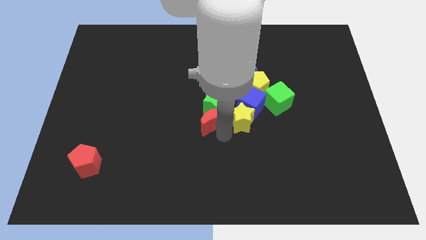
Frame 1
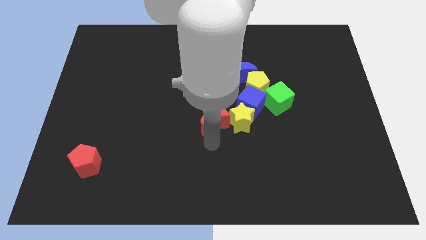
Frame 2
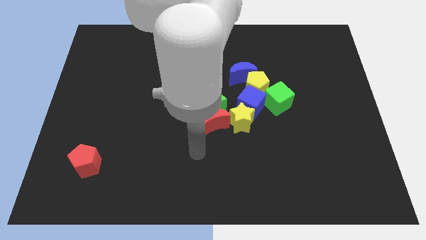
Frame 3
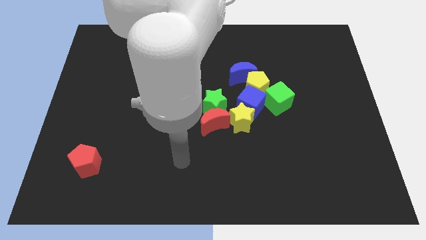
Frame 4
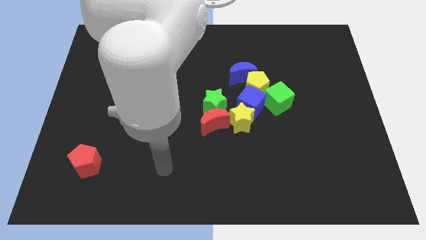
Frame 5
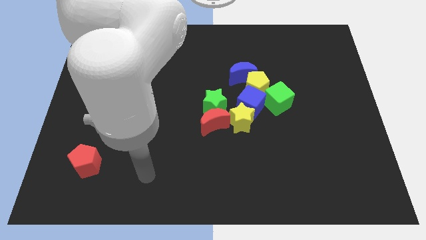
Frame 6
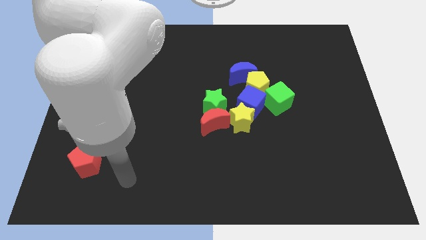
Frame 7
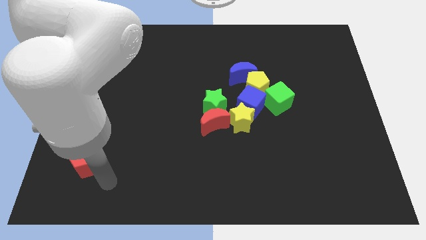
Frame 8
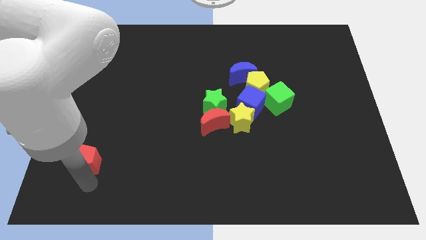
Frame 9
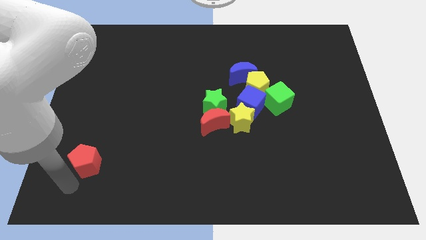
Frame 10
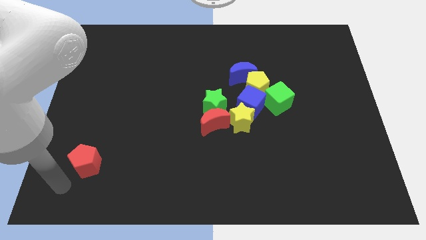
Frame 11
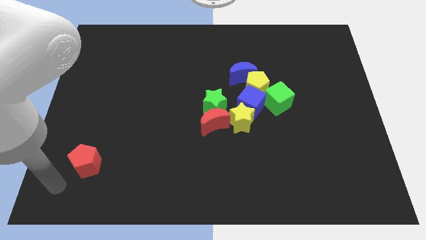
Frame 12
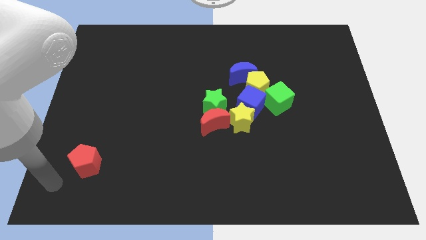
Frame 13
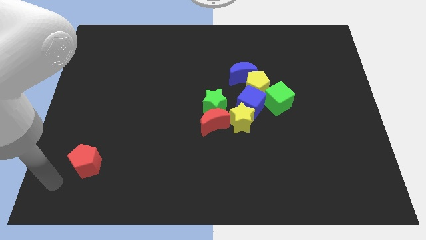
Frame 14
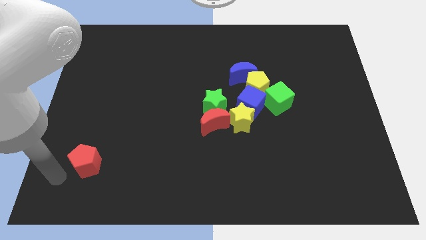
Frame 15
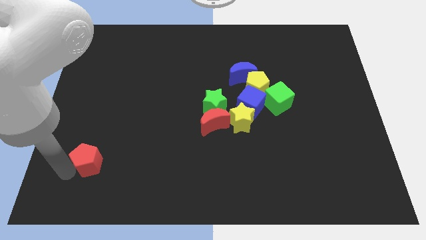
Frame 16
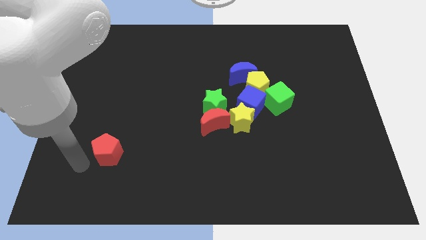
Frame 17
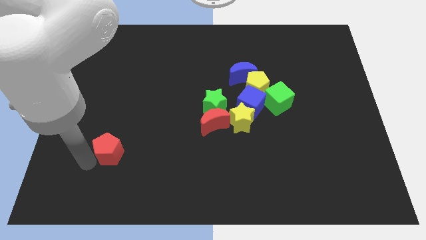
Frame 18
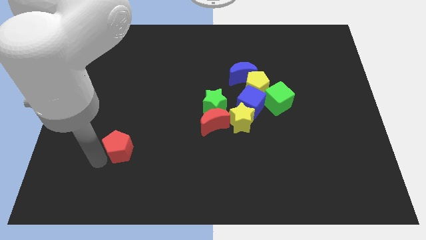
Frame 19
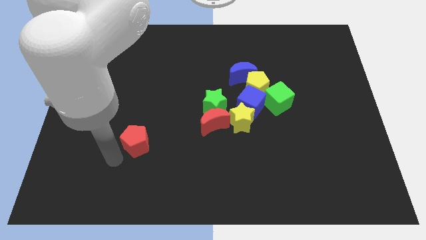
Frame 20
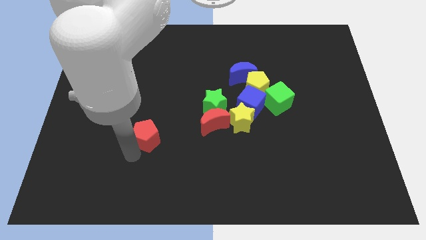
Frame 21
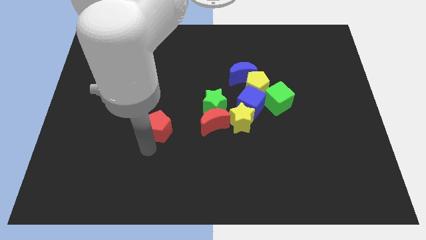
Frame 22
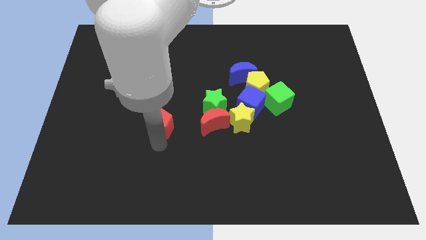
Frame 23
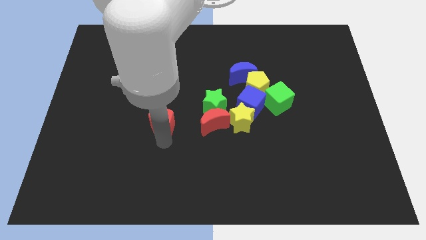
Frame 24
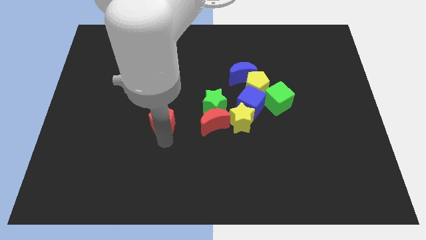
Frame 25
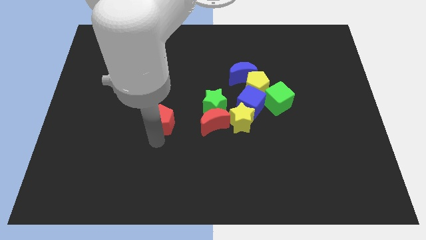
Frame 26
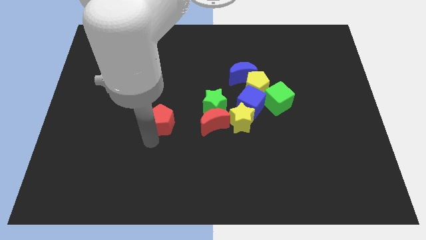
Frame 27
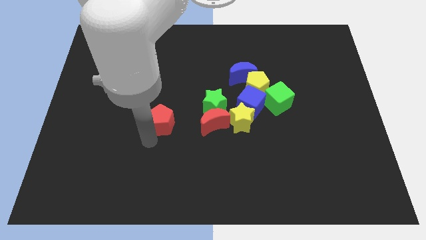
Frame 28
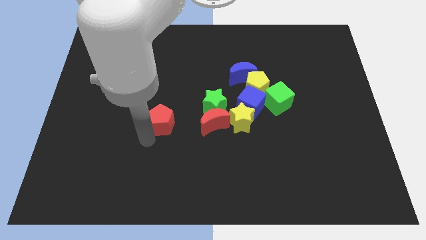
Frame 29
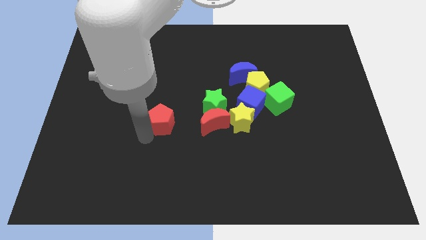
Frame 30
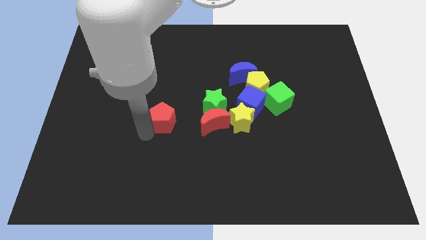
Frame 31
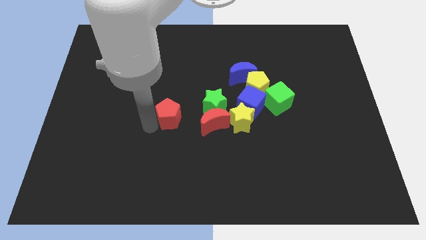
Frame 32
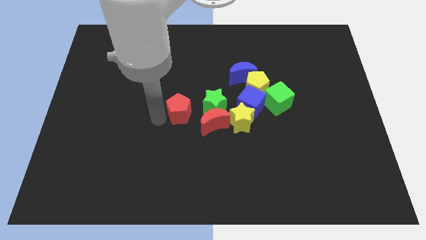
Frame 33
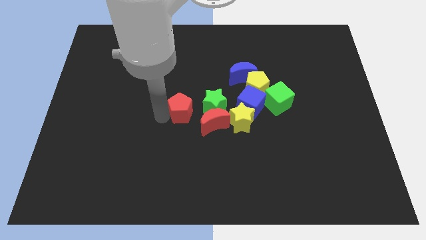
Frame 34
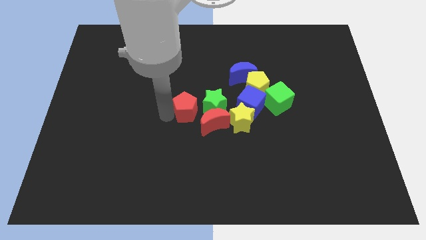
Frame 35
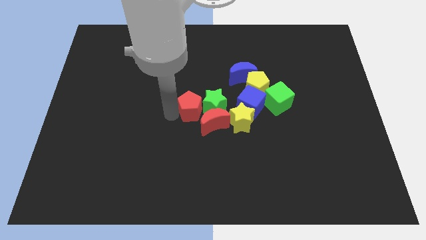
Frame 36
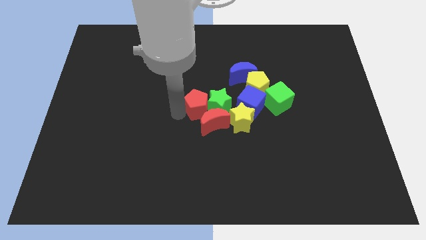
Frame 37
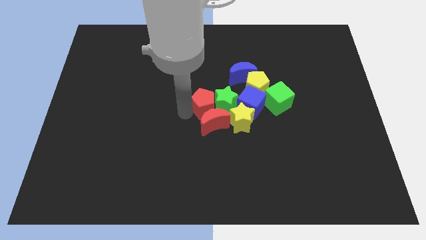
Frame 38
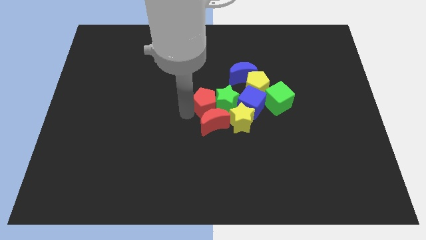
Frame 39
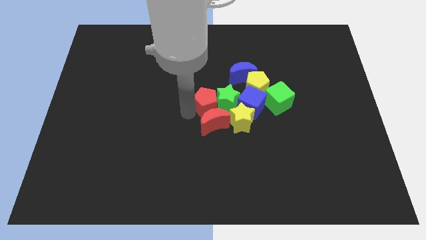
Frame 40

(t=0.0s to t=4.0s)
drag the red pentagon into the group of blocks

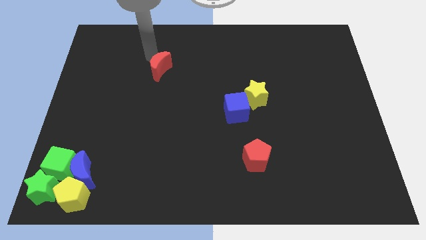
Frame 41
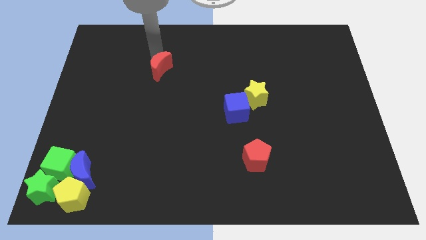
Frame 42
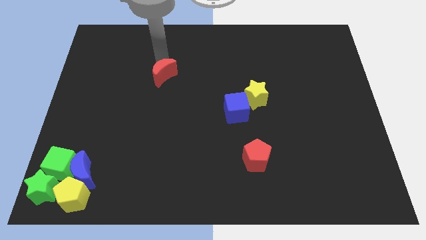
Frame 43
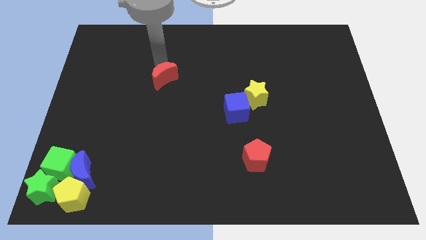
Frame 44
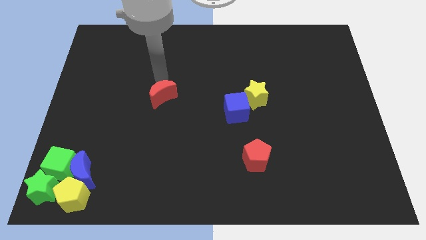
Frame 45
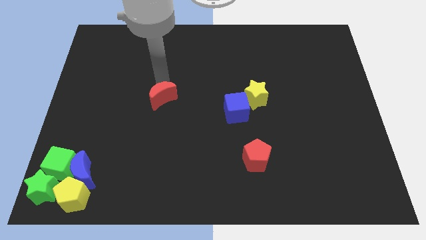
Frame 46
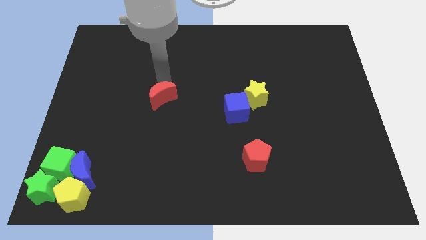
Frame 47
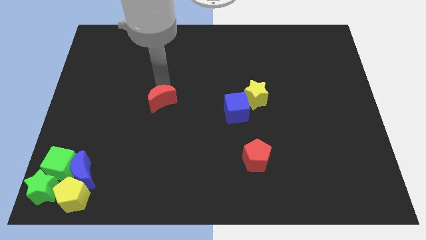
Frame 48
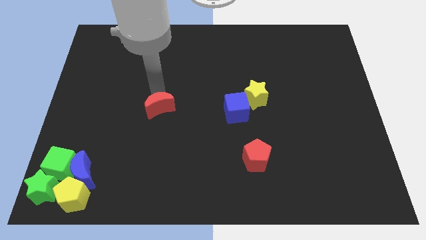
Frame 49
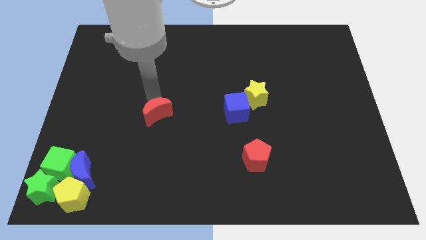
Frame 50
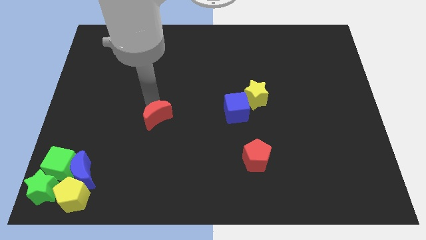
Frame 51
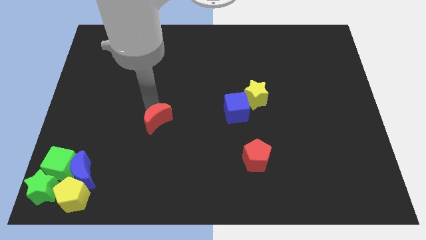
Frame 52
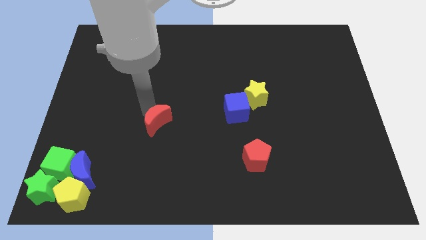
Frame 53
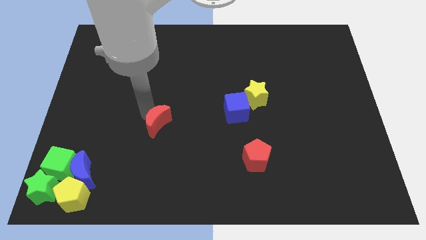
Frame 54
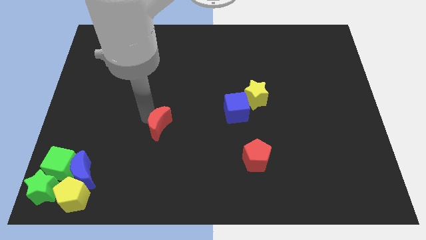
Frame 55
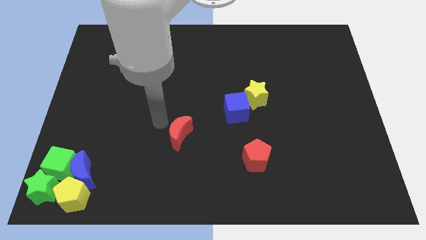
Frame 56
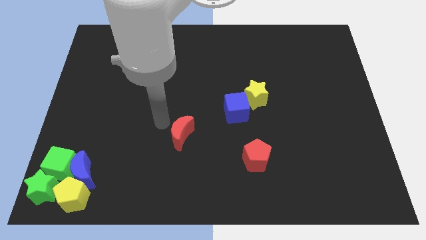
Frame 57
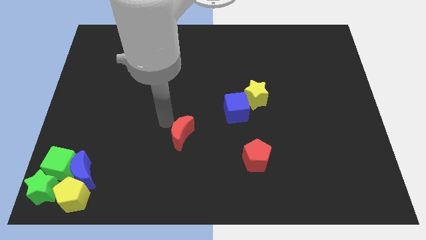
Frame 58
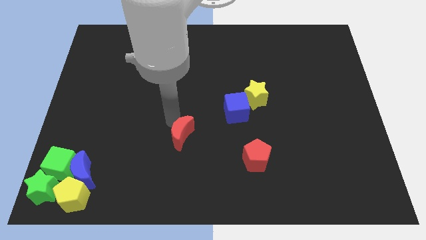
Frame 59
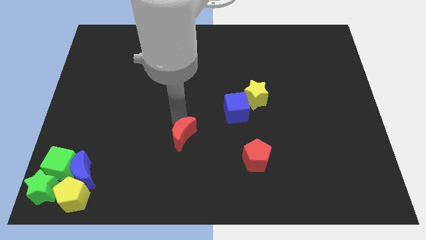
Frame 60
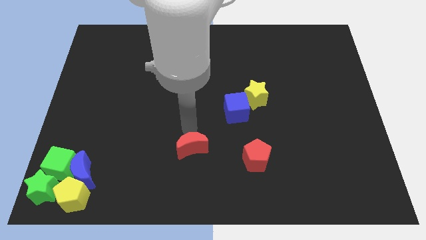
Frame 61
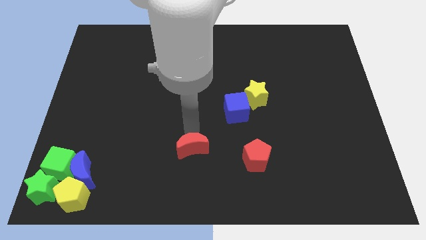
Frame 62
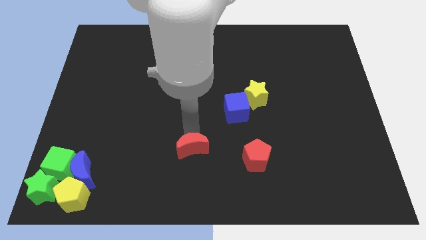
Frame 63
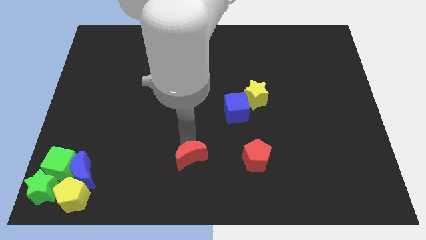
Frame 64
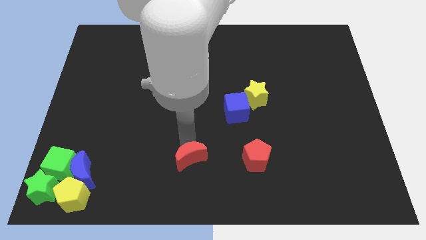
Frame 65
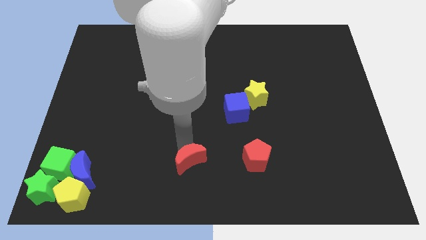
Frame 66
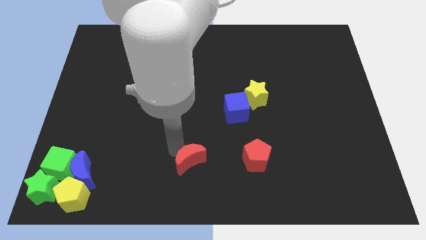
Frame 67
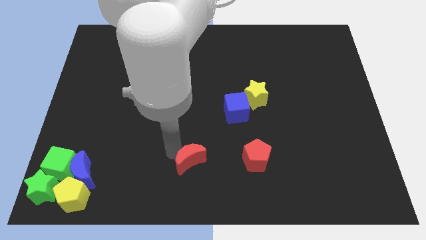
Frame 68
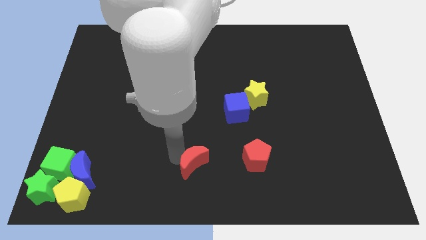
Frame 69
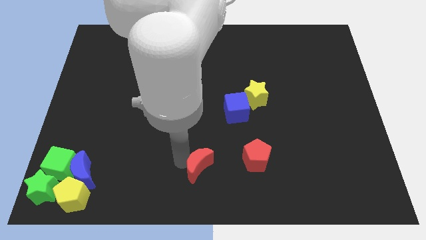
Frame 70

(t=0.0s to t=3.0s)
push the red crescent to the left of the red pentagon

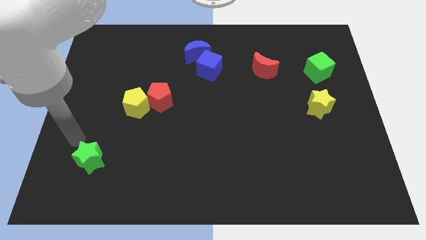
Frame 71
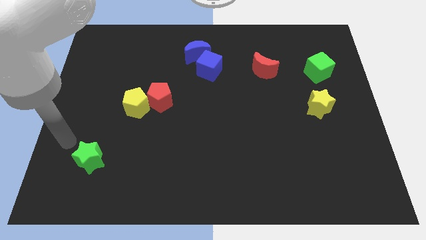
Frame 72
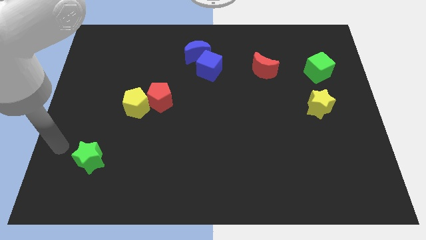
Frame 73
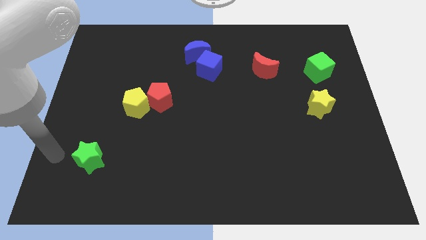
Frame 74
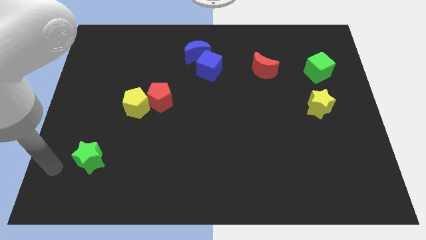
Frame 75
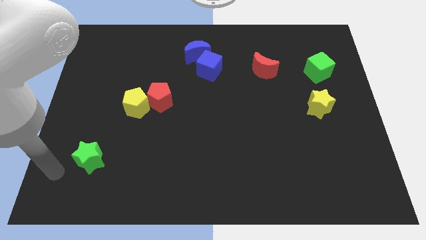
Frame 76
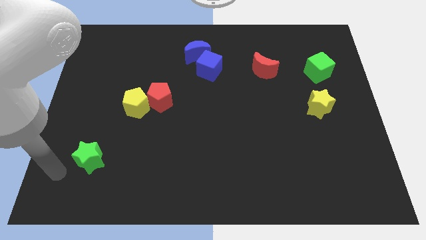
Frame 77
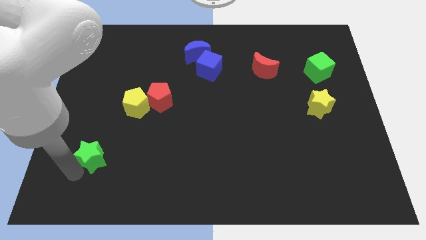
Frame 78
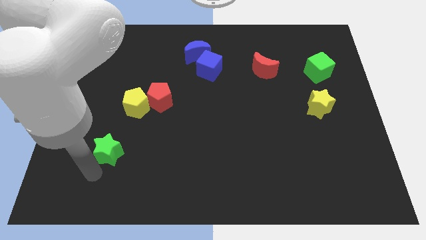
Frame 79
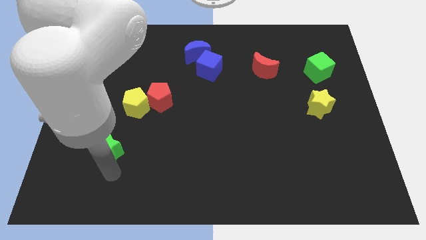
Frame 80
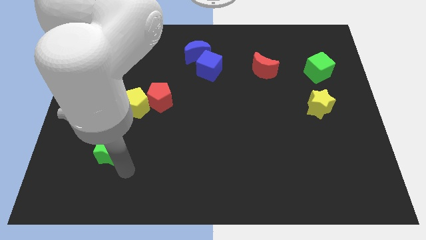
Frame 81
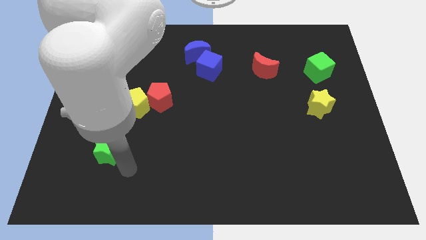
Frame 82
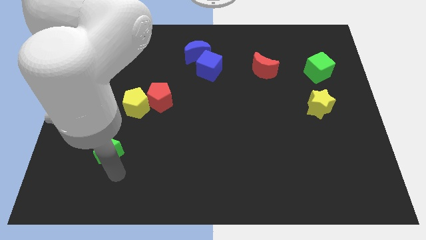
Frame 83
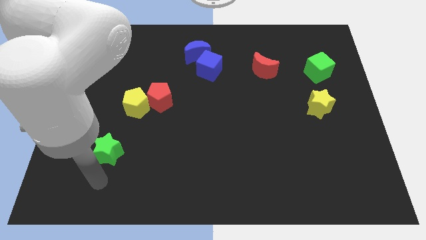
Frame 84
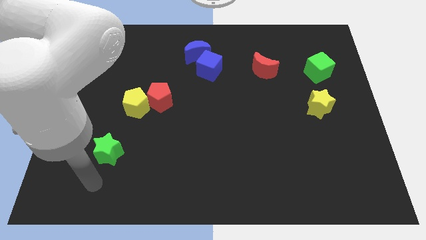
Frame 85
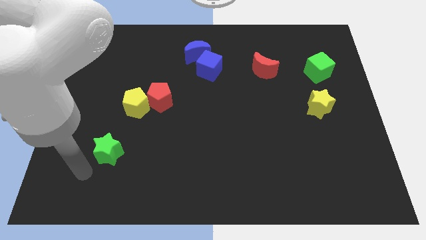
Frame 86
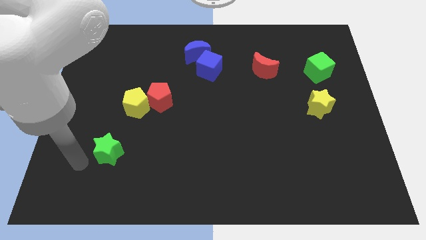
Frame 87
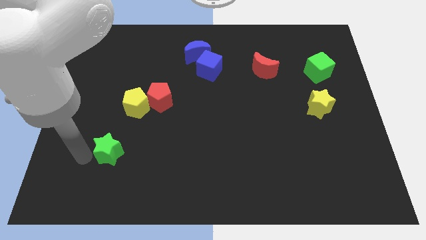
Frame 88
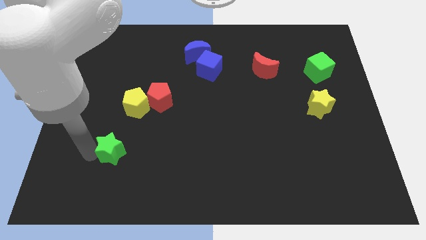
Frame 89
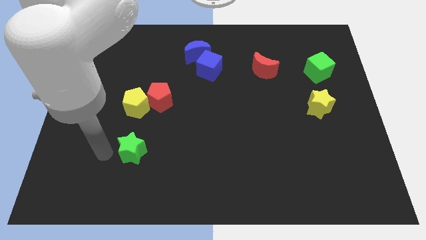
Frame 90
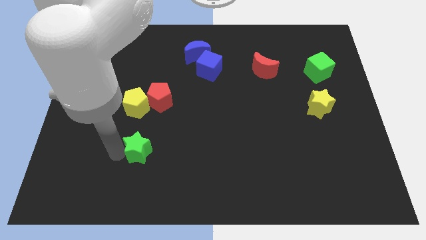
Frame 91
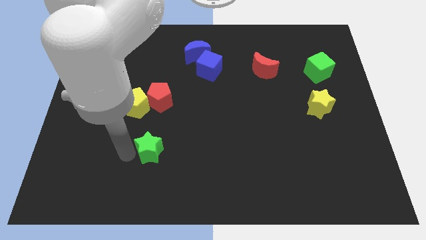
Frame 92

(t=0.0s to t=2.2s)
place the green star below the yellow penatgon
